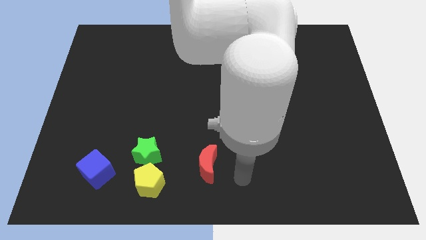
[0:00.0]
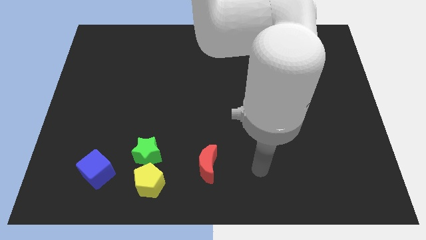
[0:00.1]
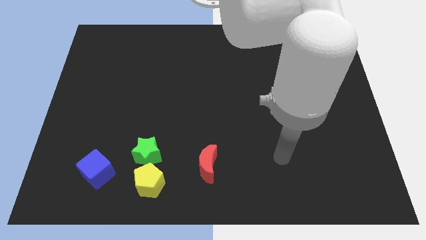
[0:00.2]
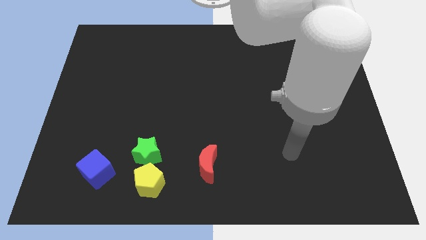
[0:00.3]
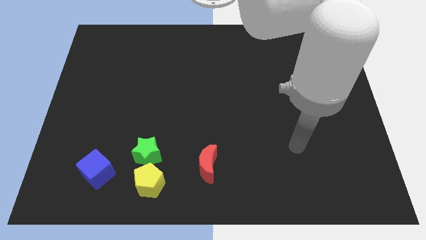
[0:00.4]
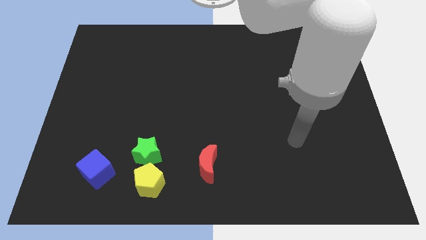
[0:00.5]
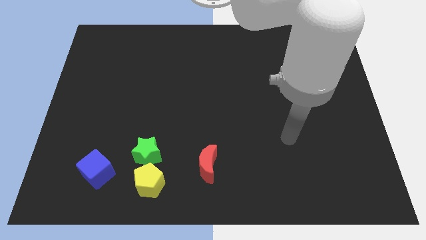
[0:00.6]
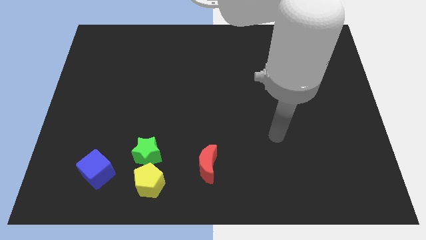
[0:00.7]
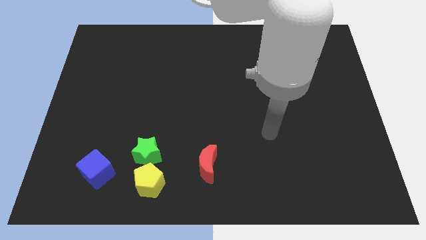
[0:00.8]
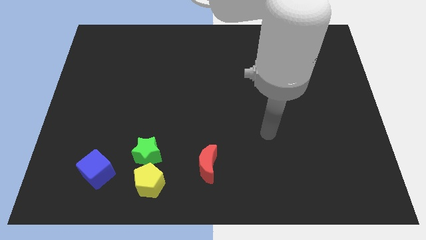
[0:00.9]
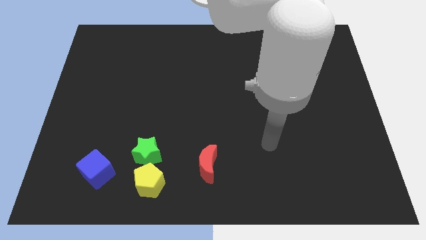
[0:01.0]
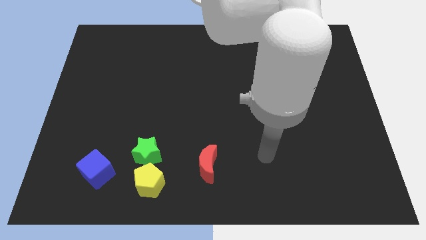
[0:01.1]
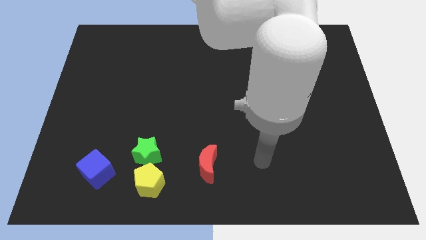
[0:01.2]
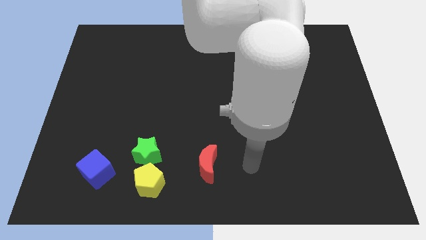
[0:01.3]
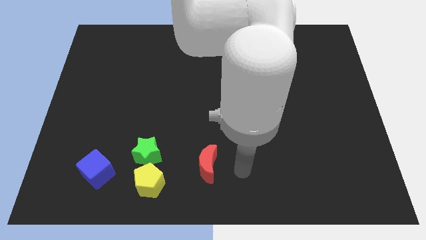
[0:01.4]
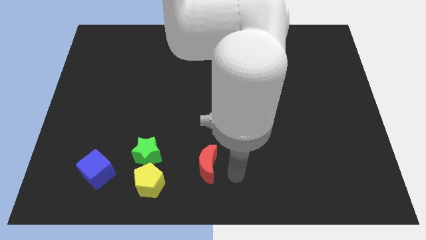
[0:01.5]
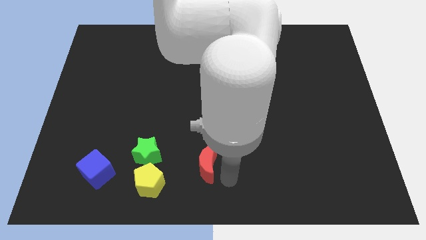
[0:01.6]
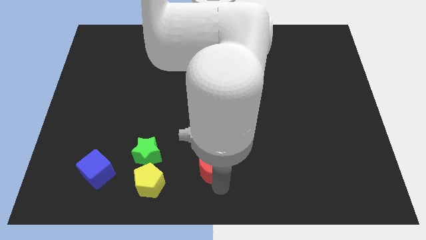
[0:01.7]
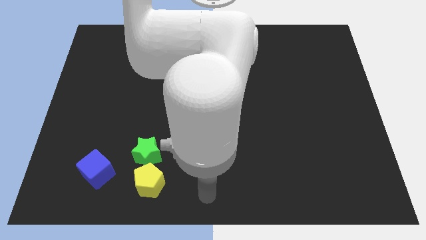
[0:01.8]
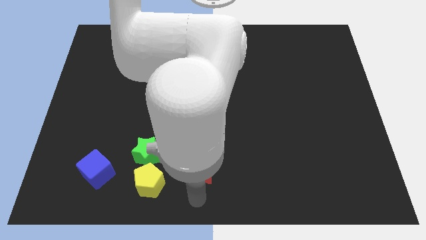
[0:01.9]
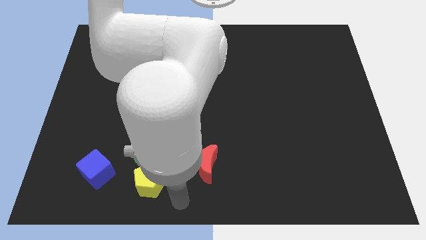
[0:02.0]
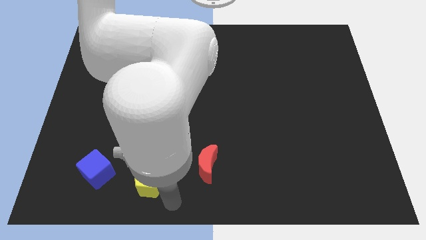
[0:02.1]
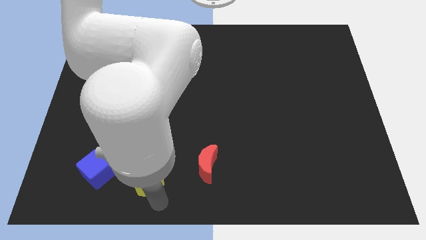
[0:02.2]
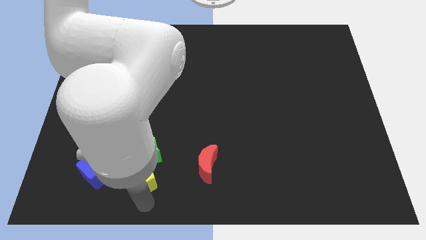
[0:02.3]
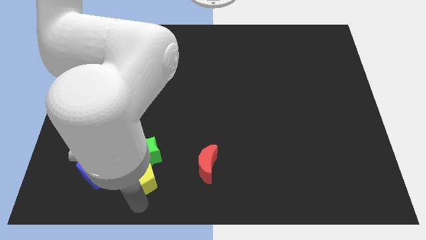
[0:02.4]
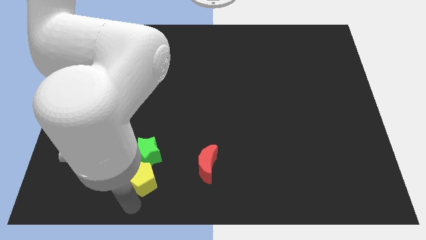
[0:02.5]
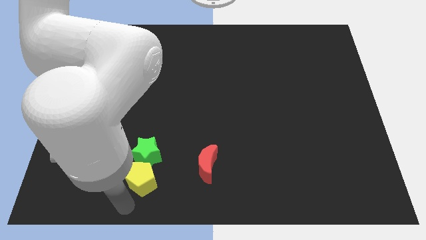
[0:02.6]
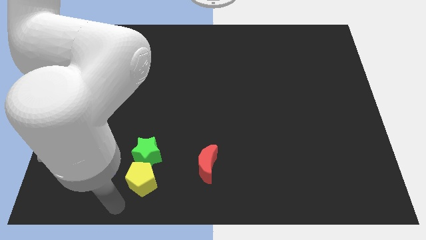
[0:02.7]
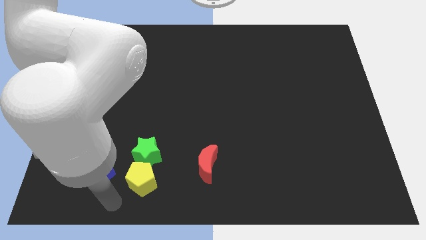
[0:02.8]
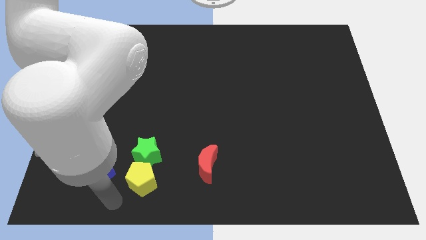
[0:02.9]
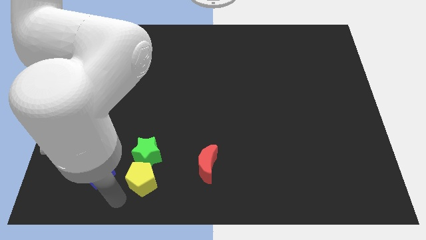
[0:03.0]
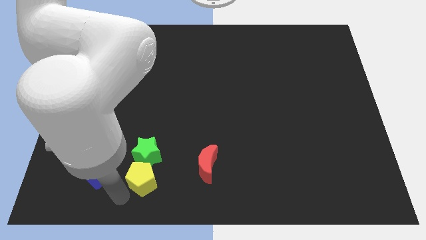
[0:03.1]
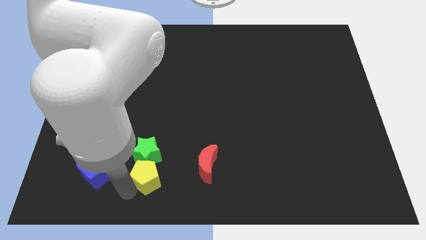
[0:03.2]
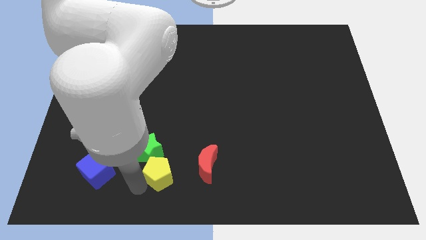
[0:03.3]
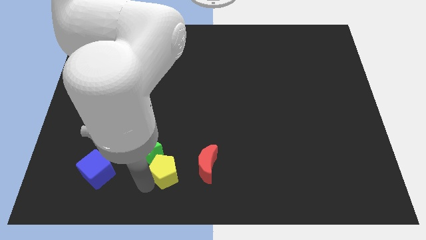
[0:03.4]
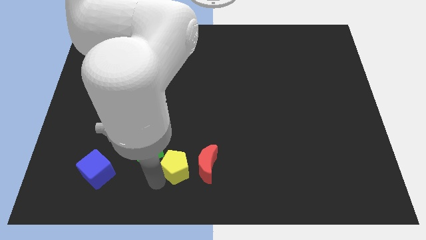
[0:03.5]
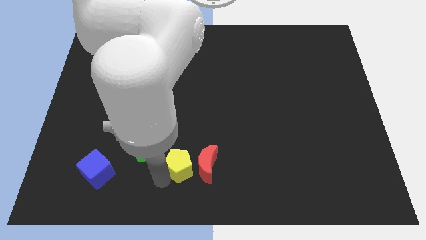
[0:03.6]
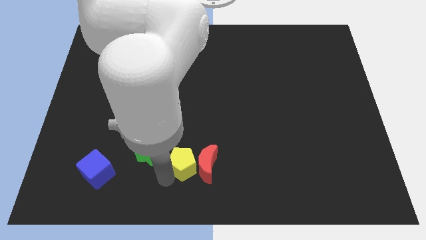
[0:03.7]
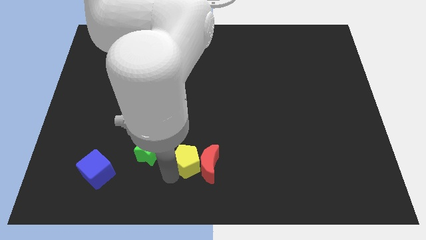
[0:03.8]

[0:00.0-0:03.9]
put the yellow block close to the moon

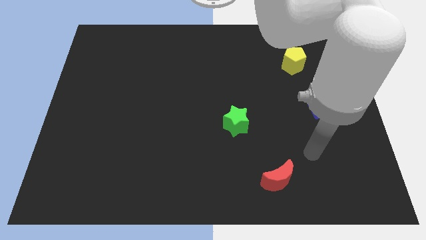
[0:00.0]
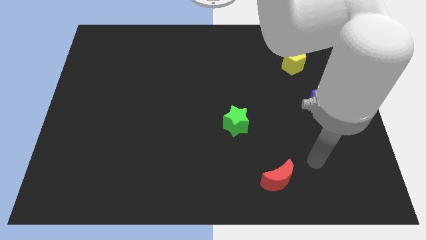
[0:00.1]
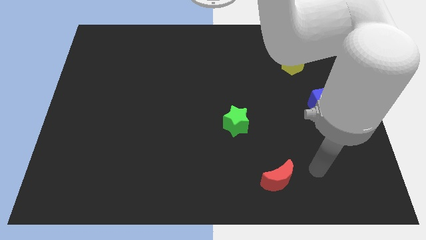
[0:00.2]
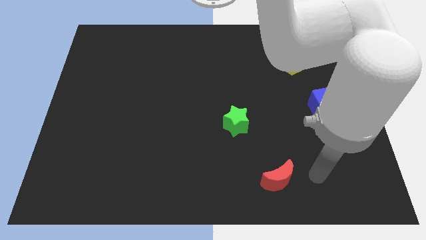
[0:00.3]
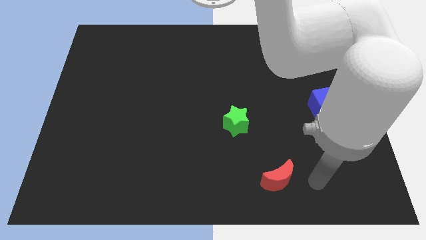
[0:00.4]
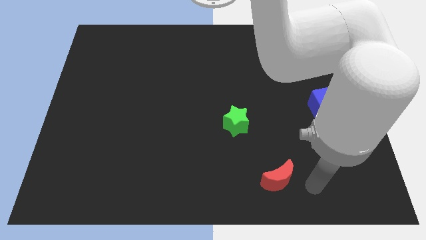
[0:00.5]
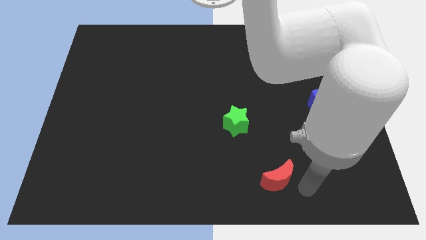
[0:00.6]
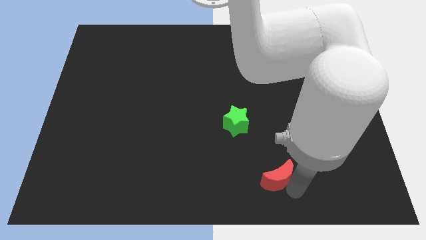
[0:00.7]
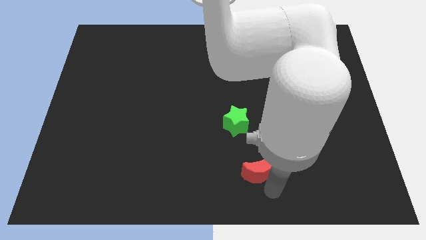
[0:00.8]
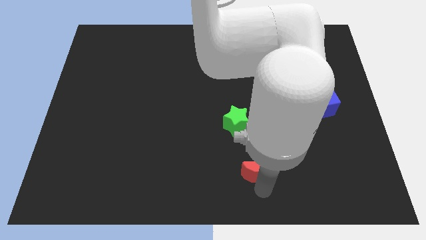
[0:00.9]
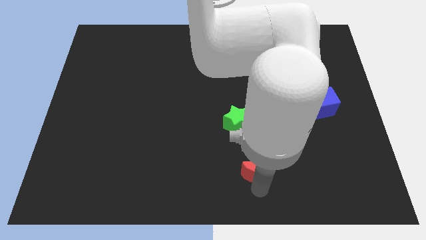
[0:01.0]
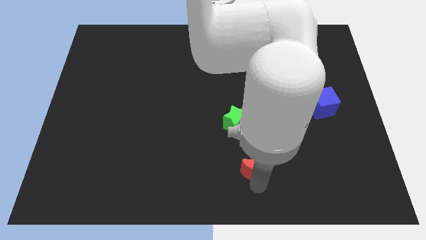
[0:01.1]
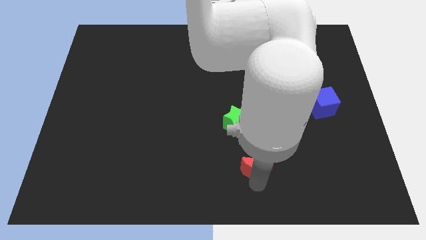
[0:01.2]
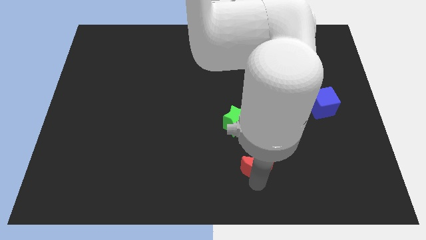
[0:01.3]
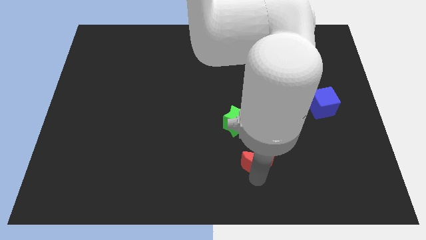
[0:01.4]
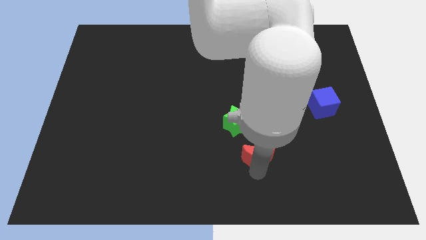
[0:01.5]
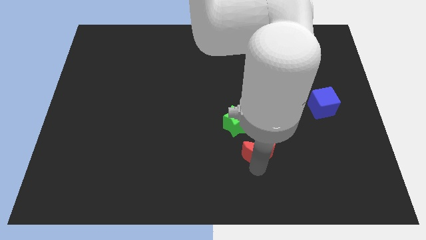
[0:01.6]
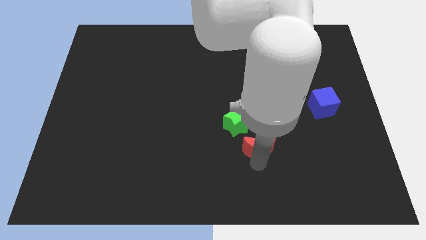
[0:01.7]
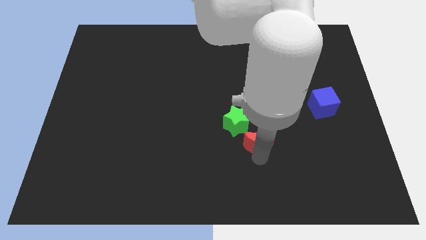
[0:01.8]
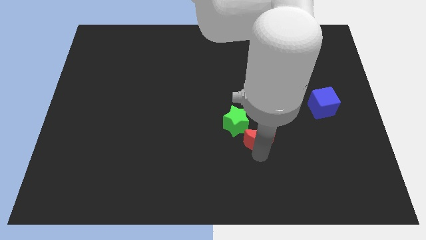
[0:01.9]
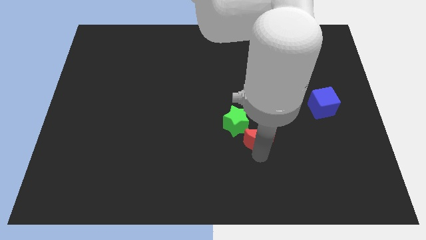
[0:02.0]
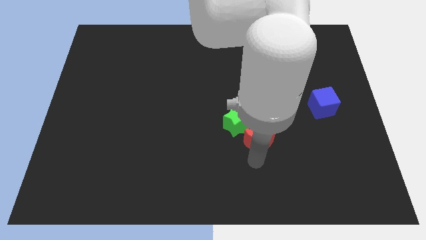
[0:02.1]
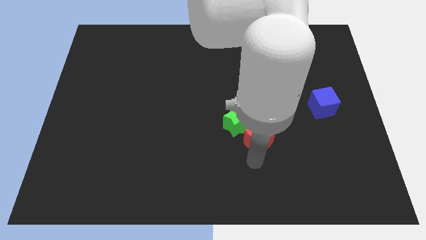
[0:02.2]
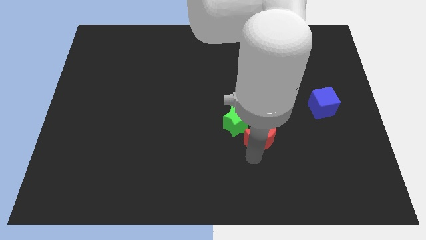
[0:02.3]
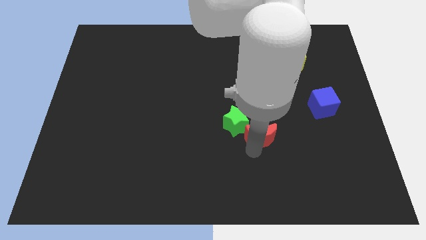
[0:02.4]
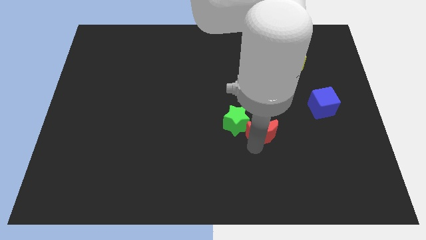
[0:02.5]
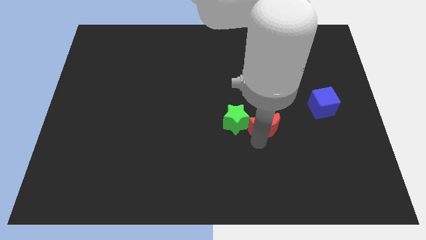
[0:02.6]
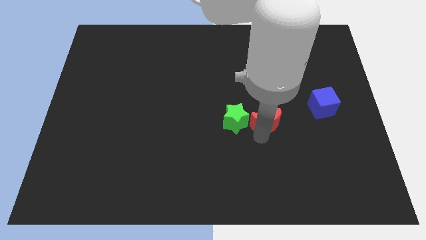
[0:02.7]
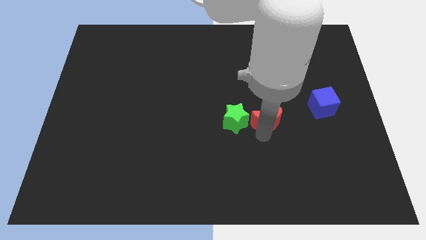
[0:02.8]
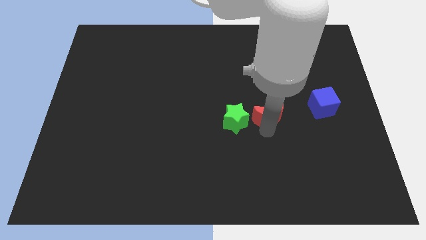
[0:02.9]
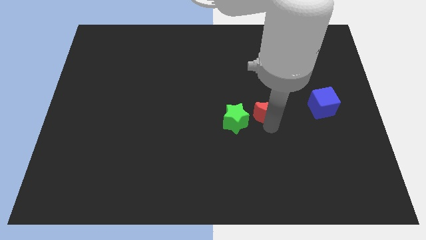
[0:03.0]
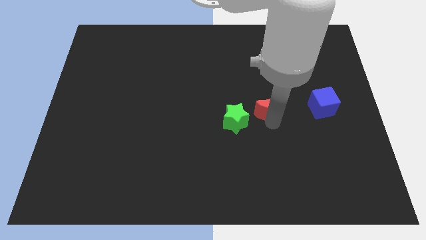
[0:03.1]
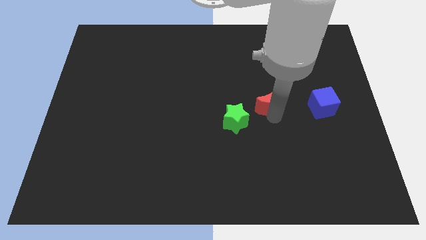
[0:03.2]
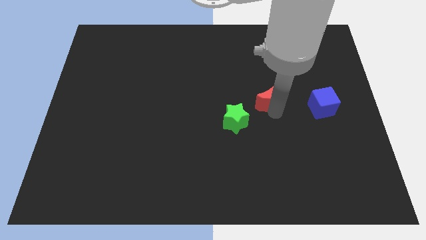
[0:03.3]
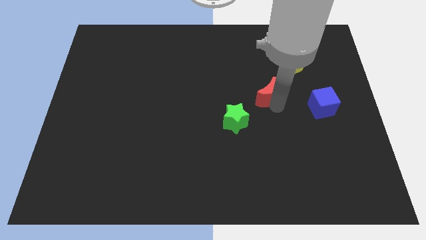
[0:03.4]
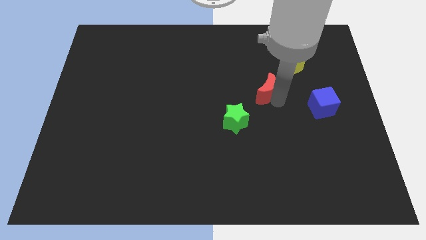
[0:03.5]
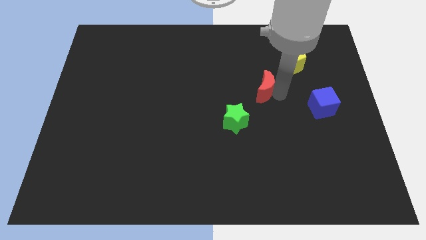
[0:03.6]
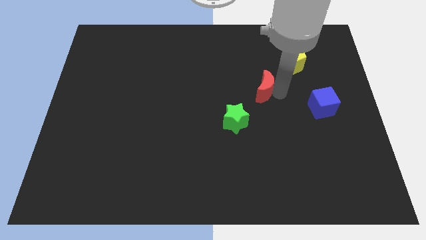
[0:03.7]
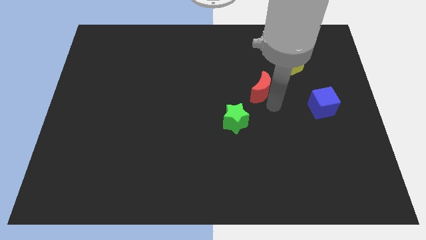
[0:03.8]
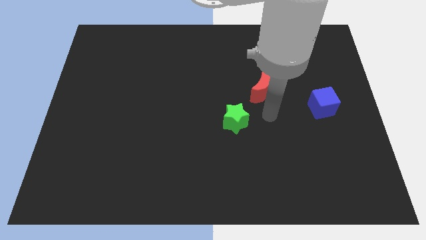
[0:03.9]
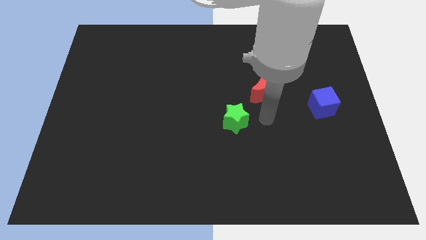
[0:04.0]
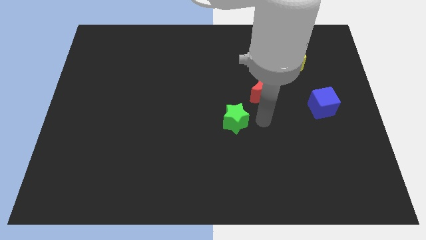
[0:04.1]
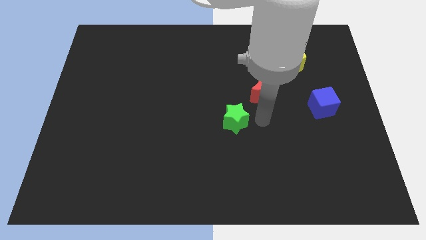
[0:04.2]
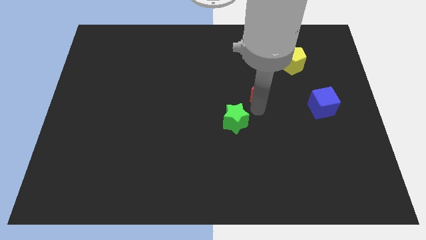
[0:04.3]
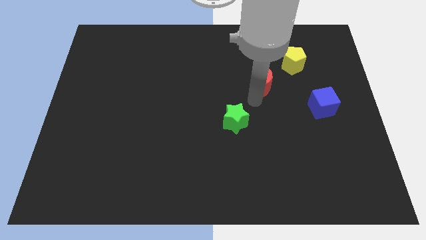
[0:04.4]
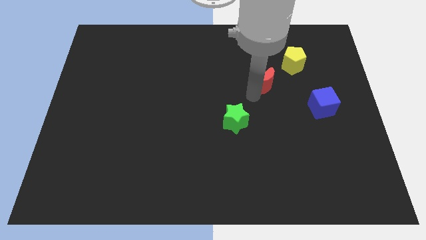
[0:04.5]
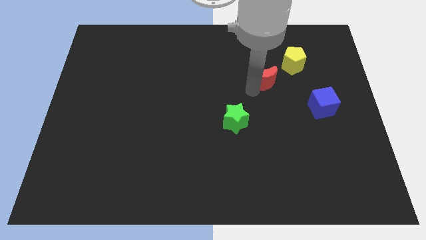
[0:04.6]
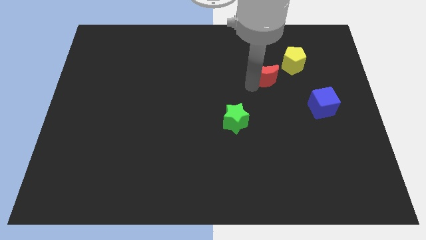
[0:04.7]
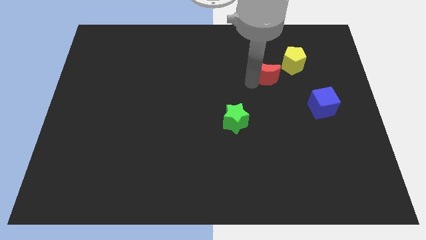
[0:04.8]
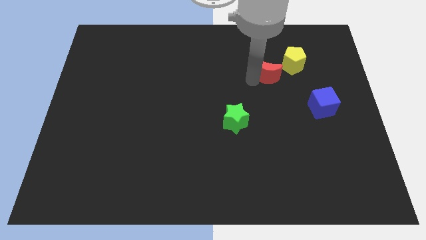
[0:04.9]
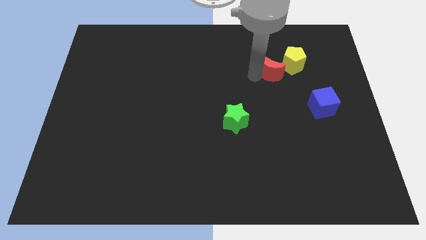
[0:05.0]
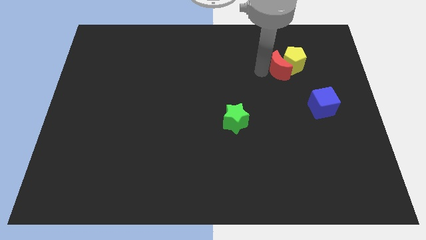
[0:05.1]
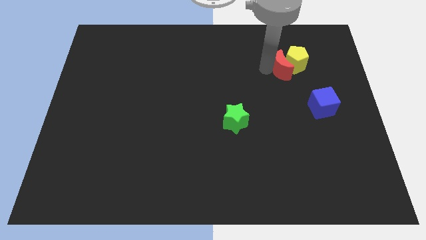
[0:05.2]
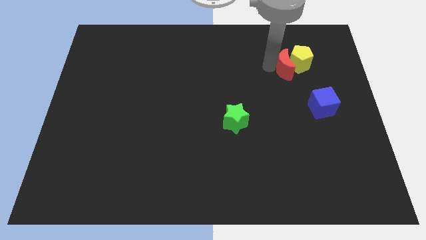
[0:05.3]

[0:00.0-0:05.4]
push the red moon next to the pentagon
